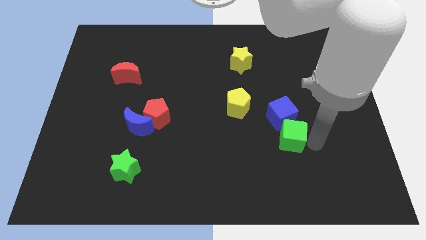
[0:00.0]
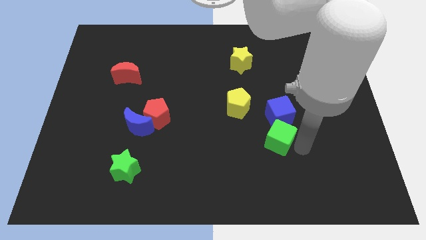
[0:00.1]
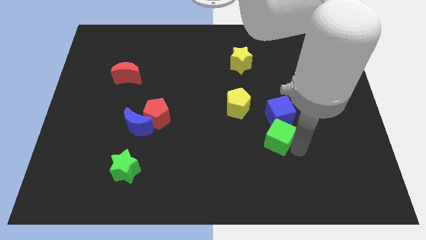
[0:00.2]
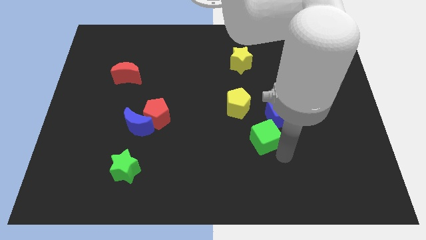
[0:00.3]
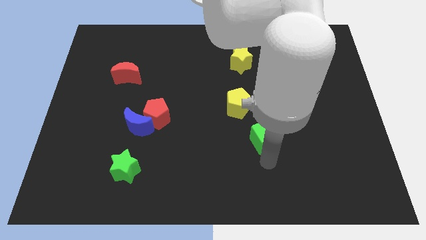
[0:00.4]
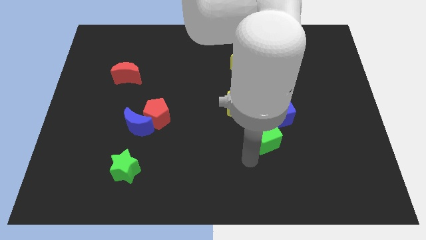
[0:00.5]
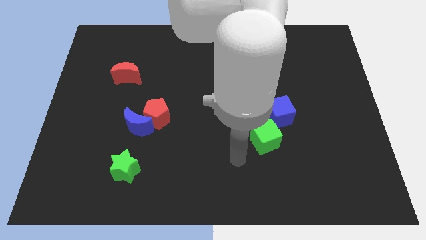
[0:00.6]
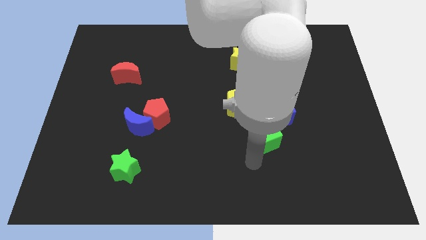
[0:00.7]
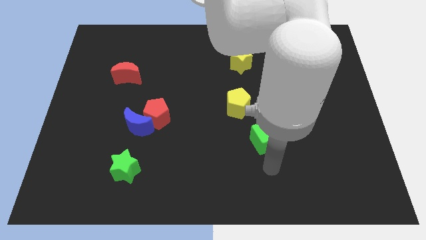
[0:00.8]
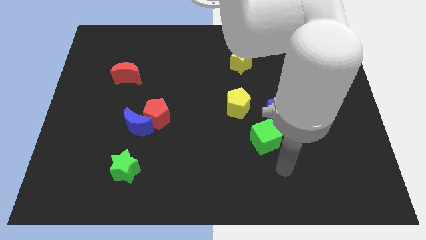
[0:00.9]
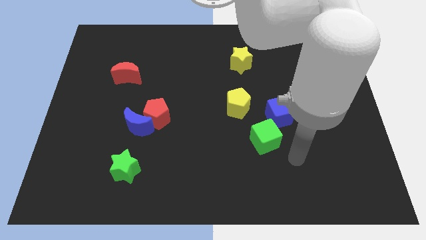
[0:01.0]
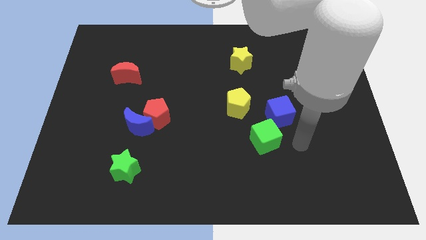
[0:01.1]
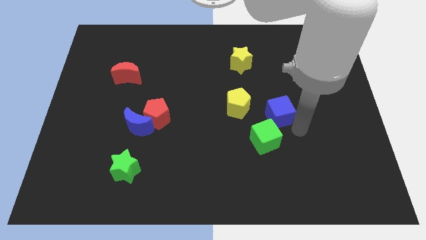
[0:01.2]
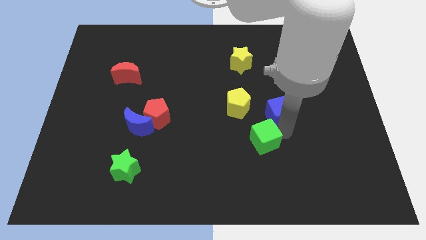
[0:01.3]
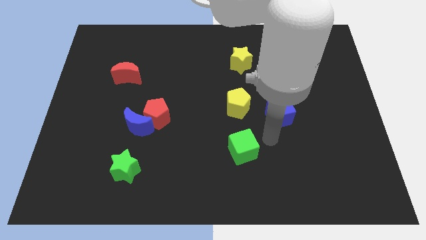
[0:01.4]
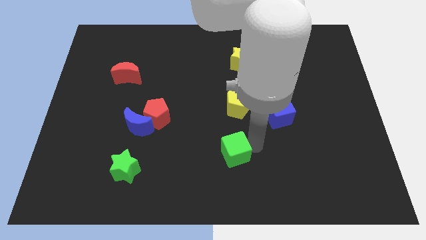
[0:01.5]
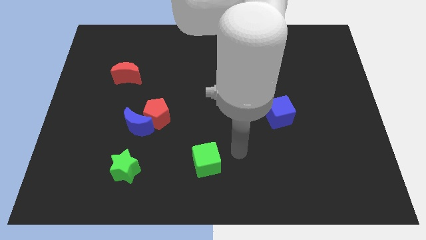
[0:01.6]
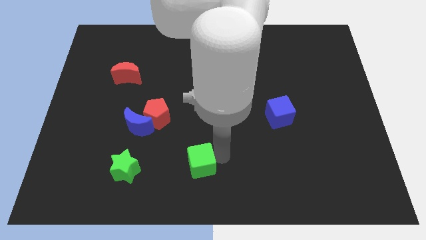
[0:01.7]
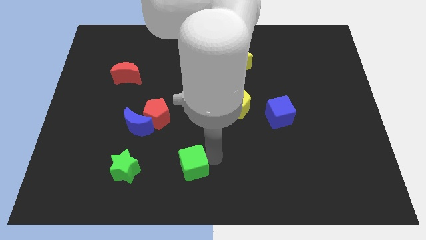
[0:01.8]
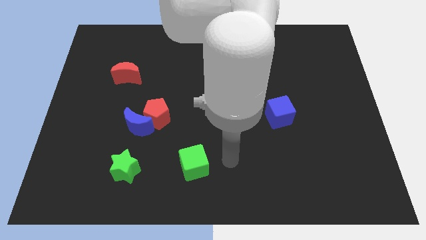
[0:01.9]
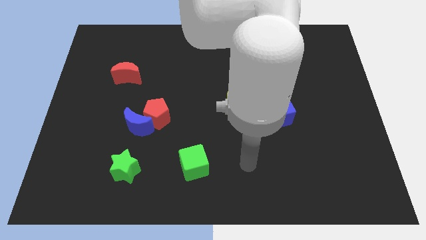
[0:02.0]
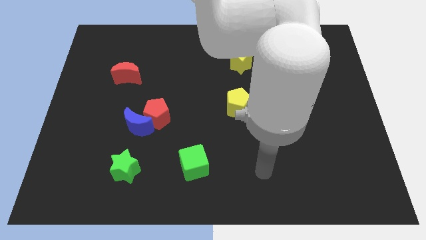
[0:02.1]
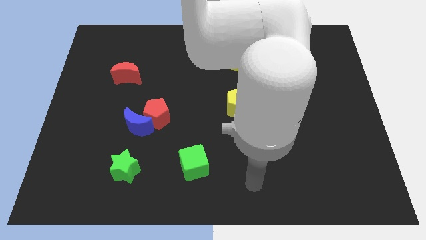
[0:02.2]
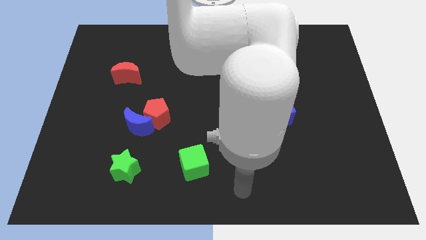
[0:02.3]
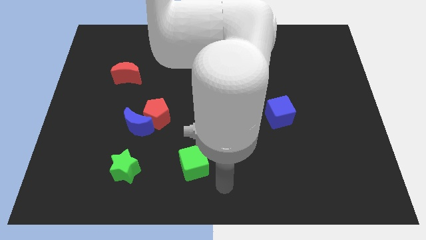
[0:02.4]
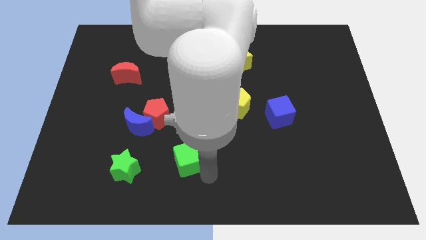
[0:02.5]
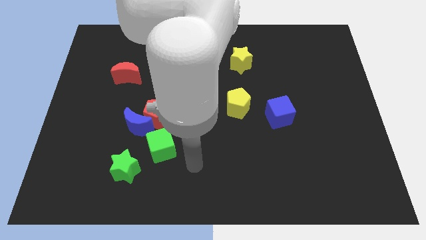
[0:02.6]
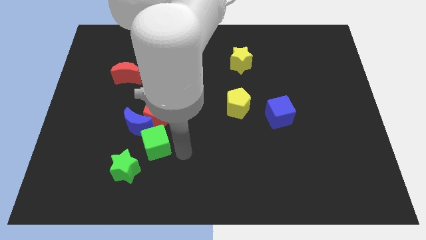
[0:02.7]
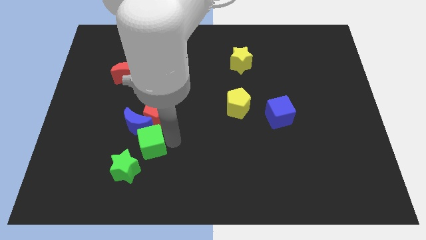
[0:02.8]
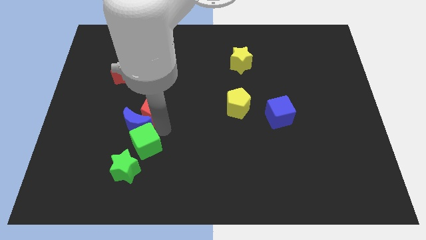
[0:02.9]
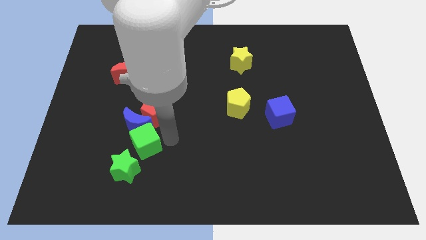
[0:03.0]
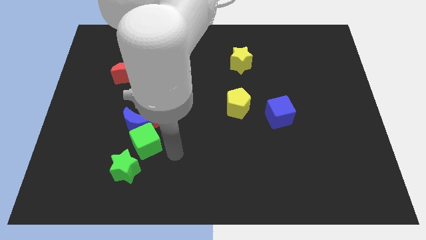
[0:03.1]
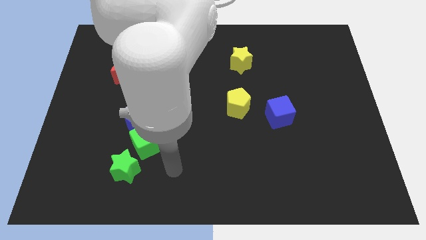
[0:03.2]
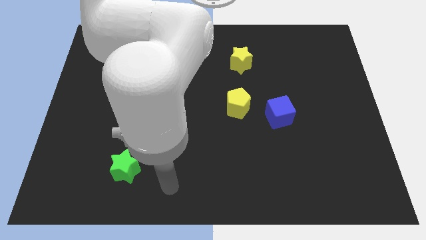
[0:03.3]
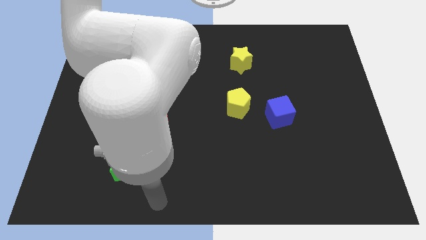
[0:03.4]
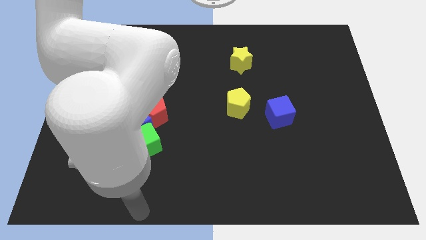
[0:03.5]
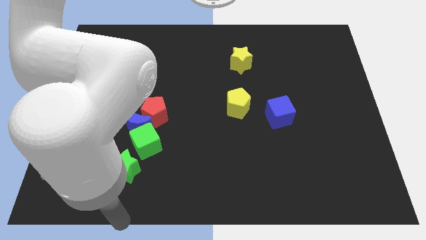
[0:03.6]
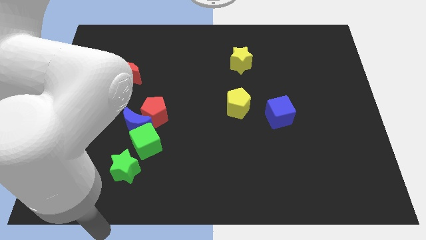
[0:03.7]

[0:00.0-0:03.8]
place the green cube above the green star

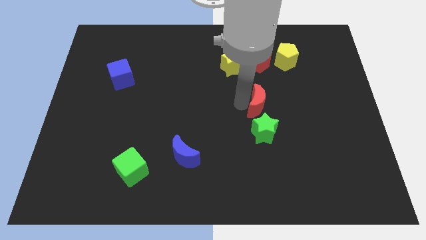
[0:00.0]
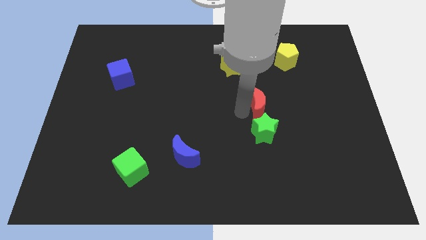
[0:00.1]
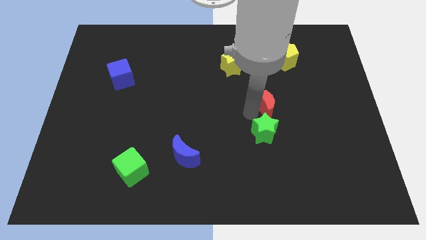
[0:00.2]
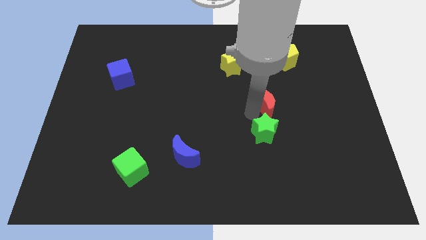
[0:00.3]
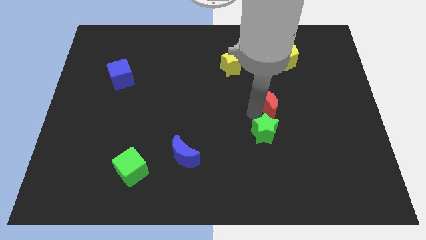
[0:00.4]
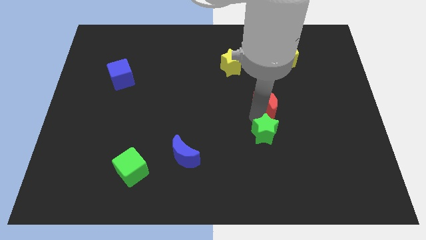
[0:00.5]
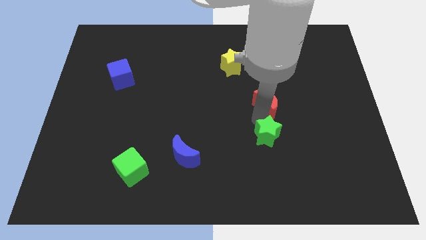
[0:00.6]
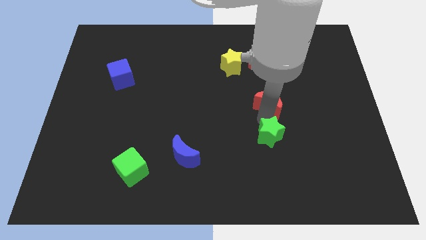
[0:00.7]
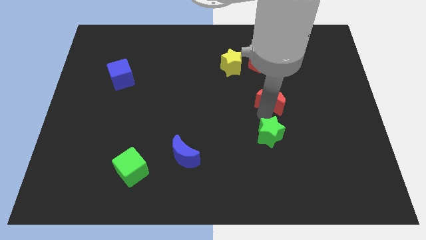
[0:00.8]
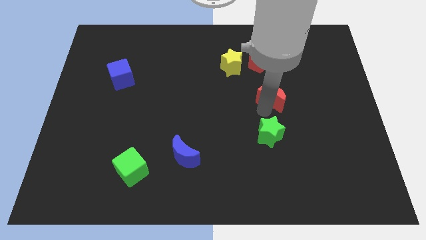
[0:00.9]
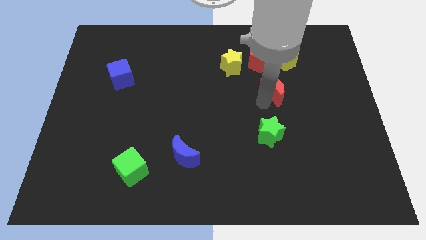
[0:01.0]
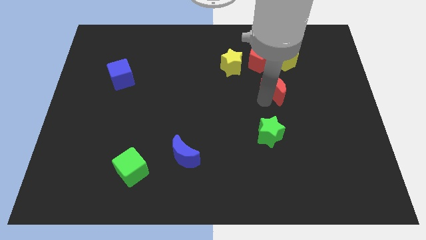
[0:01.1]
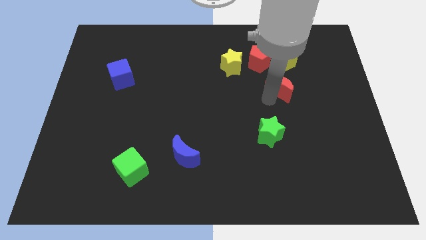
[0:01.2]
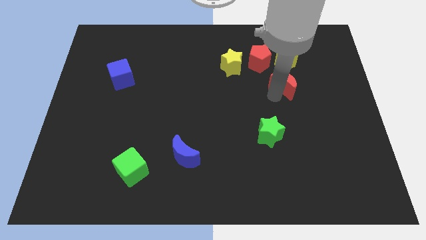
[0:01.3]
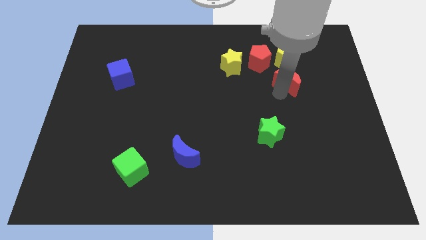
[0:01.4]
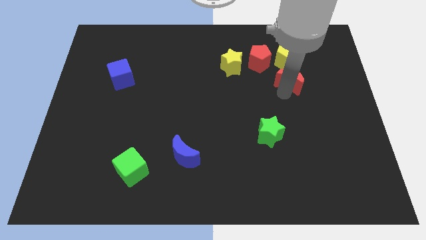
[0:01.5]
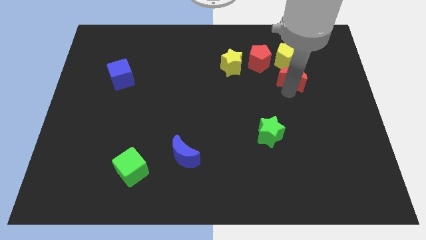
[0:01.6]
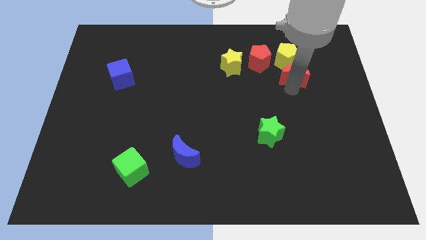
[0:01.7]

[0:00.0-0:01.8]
place red crescent below yellow pentagon

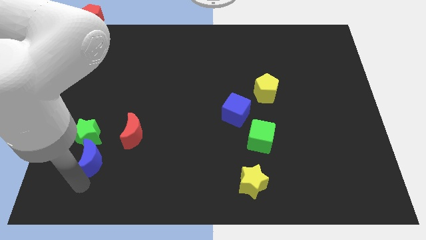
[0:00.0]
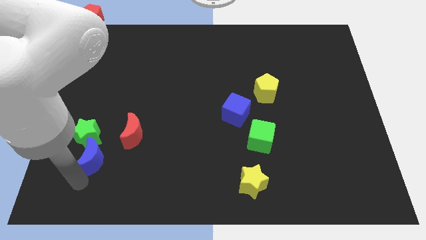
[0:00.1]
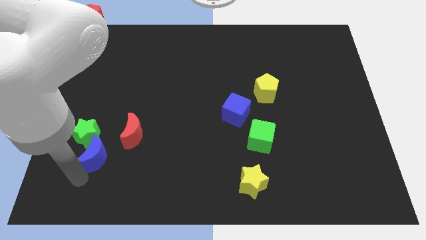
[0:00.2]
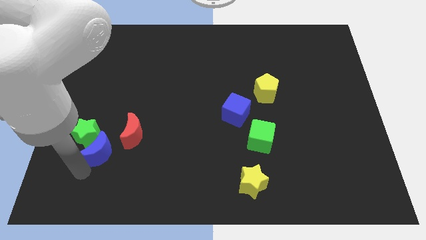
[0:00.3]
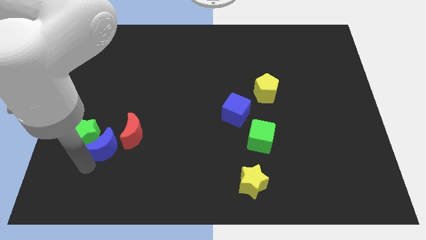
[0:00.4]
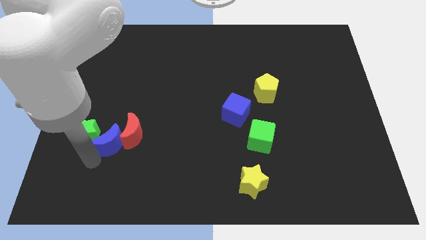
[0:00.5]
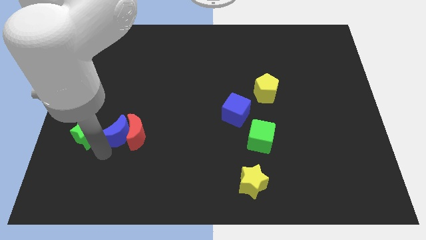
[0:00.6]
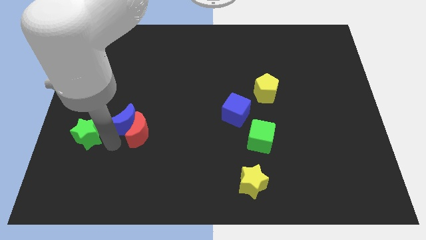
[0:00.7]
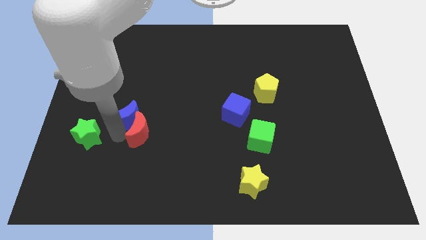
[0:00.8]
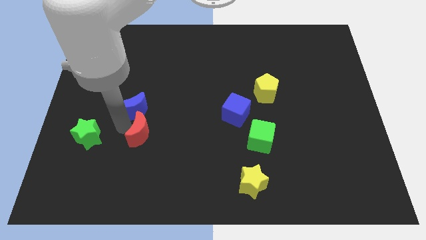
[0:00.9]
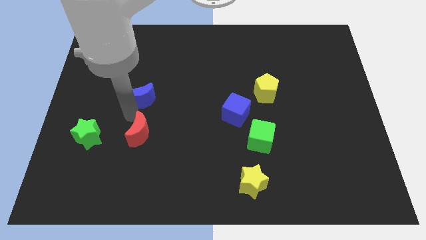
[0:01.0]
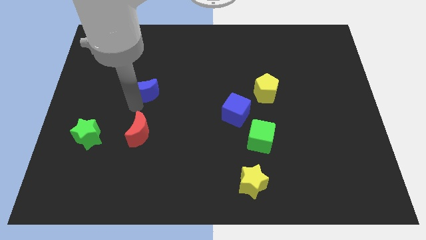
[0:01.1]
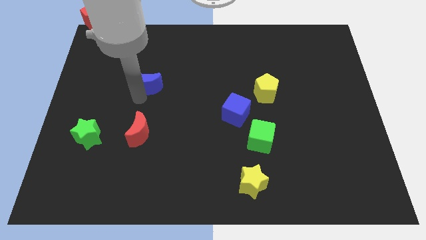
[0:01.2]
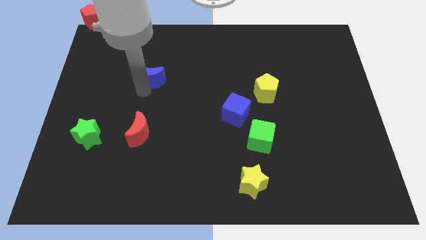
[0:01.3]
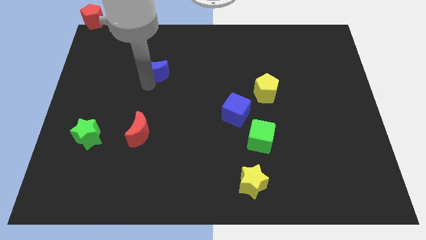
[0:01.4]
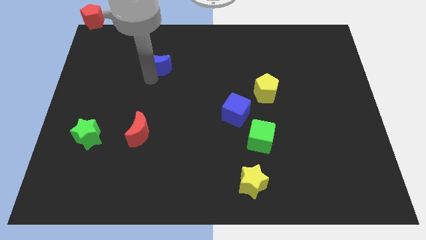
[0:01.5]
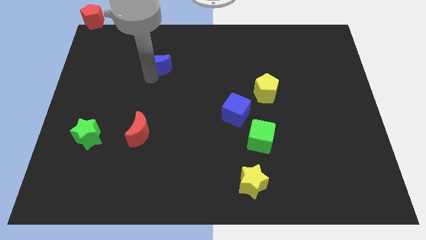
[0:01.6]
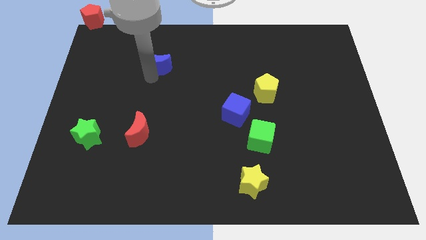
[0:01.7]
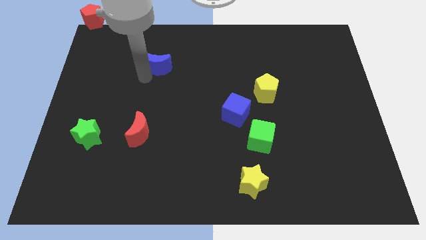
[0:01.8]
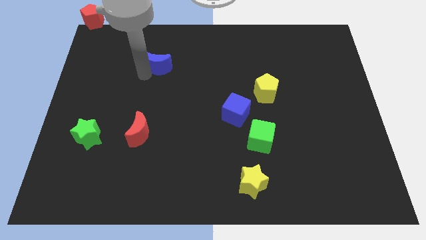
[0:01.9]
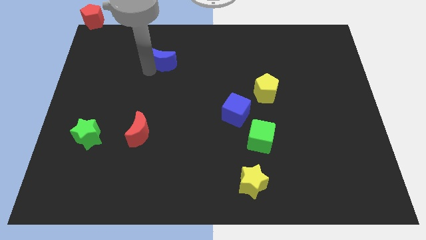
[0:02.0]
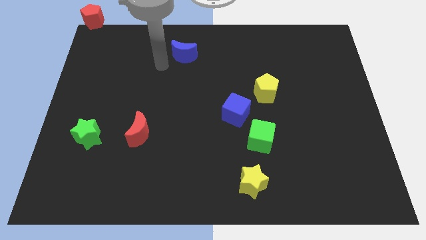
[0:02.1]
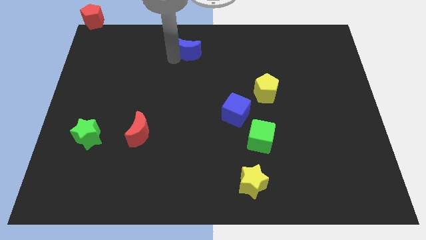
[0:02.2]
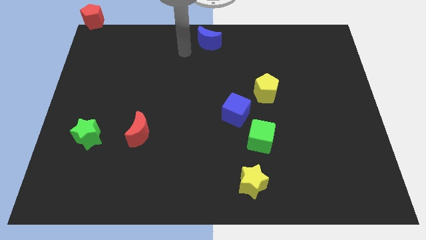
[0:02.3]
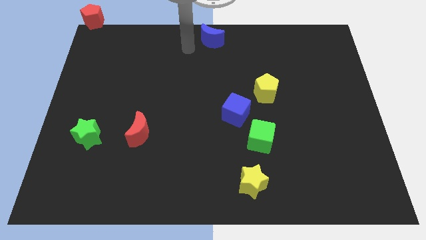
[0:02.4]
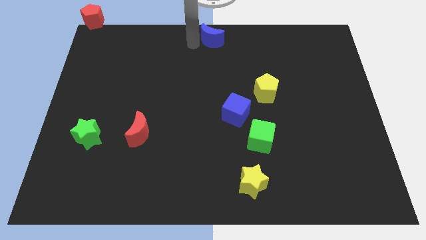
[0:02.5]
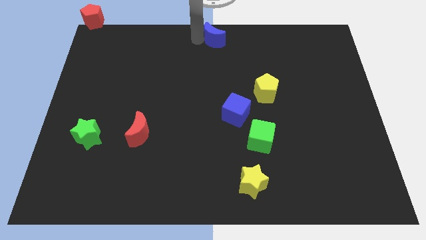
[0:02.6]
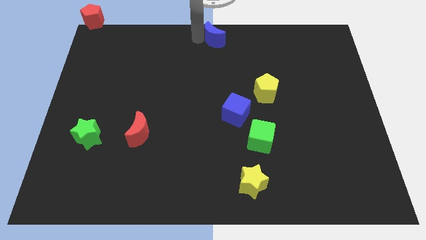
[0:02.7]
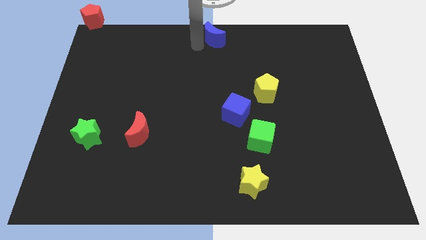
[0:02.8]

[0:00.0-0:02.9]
place blue crescent at the top center of the board

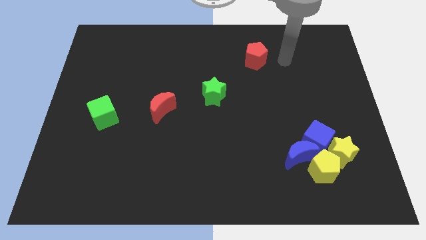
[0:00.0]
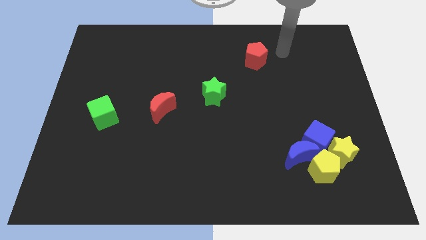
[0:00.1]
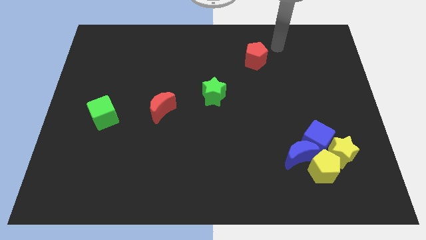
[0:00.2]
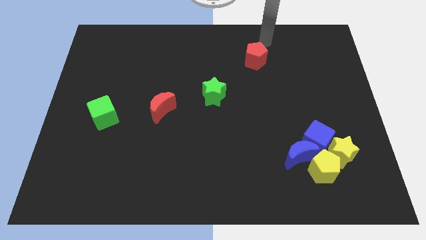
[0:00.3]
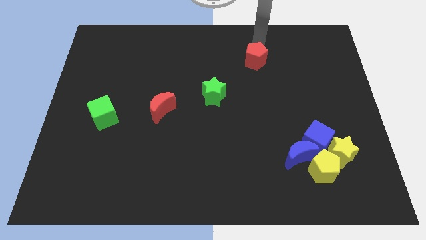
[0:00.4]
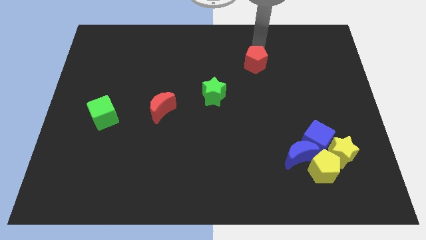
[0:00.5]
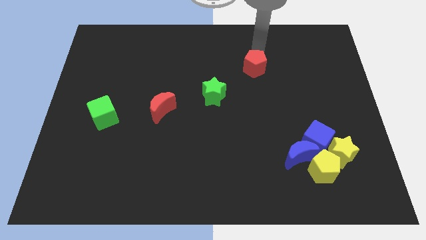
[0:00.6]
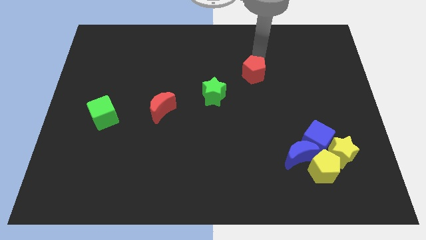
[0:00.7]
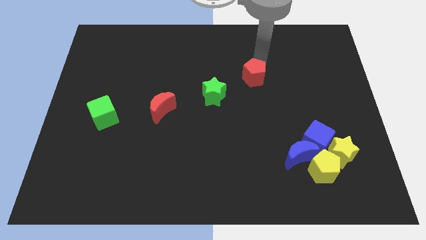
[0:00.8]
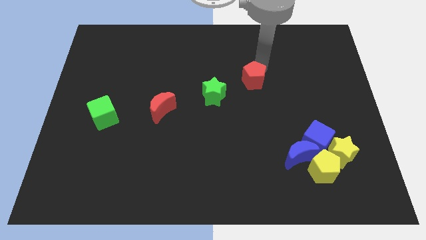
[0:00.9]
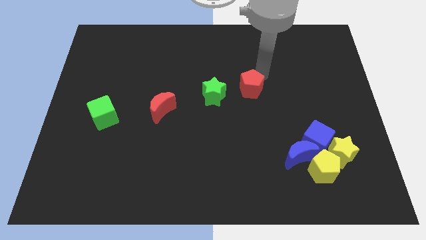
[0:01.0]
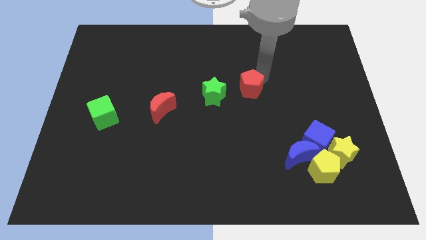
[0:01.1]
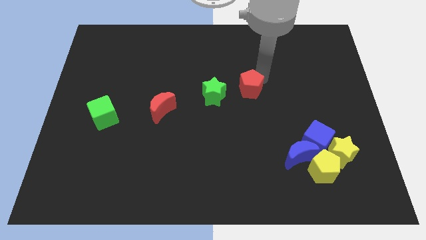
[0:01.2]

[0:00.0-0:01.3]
place the red pentagon to the right side of the green star
